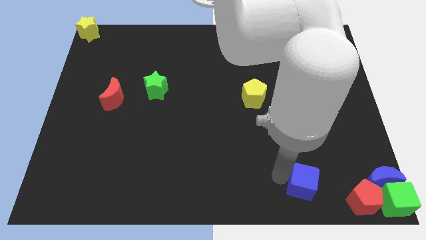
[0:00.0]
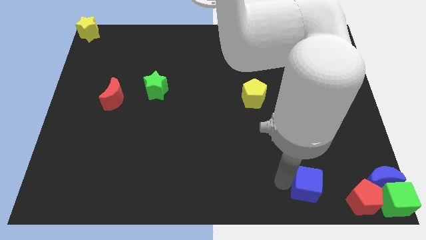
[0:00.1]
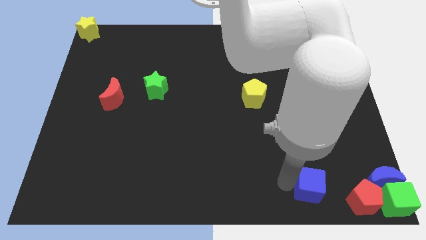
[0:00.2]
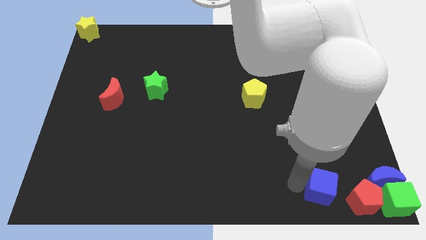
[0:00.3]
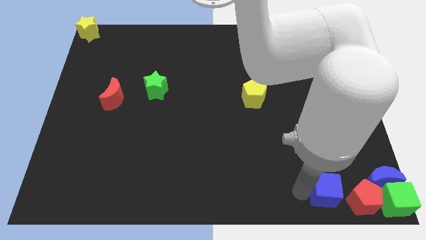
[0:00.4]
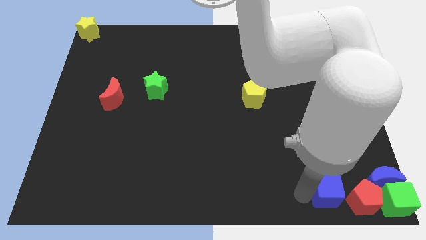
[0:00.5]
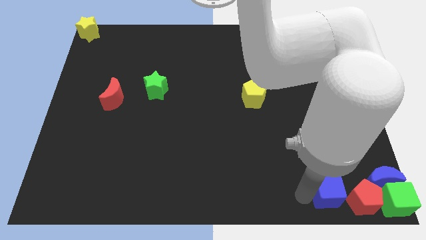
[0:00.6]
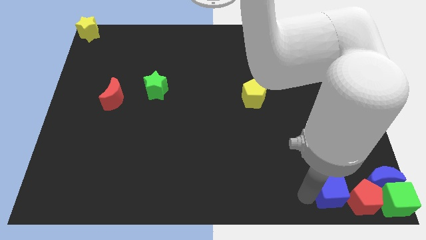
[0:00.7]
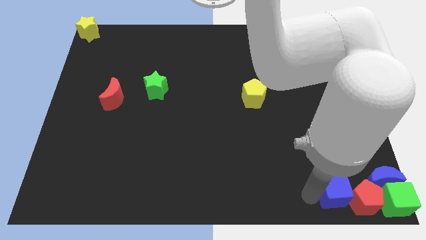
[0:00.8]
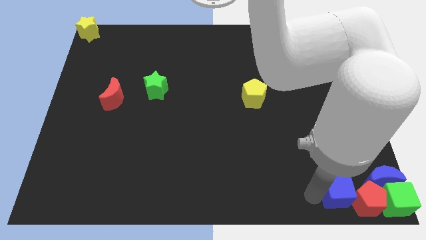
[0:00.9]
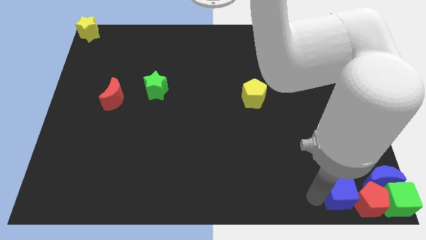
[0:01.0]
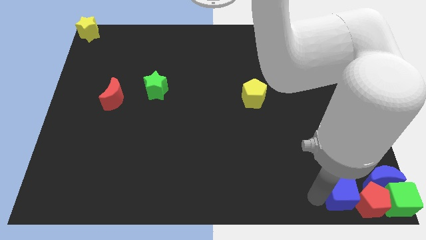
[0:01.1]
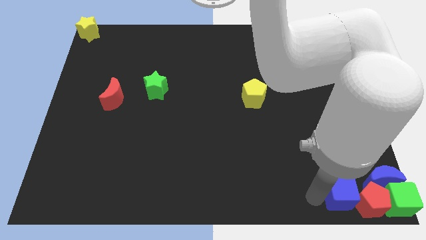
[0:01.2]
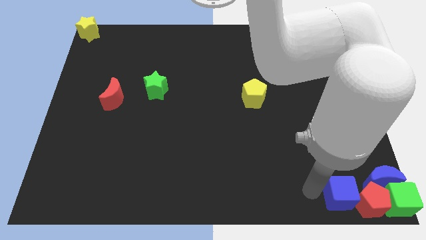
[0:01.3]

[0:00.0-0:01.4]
push the blue cube into the group of blocks

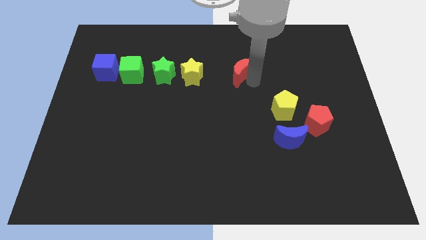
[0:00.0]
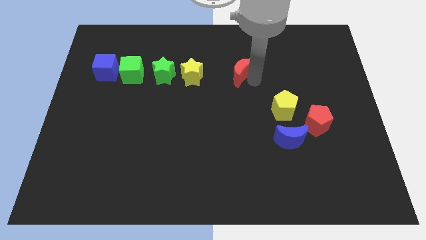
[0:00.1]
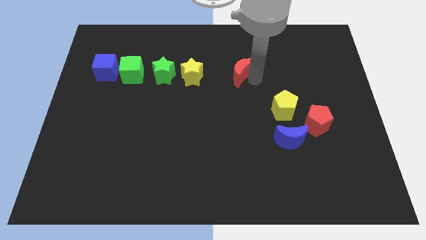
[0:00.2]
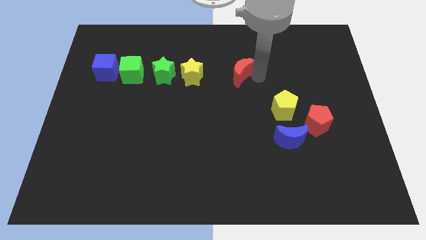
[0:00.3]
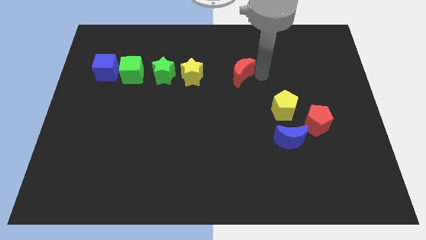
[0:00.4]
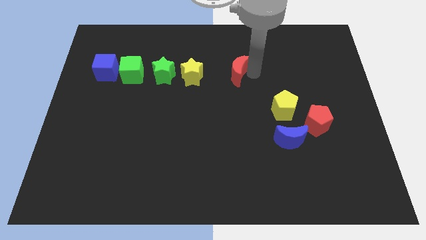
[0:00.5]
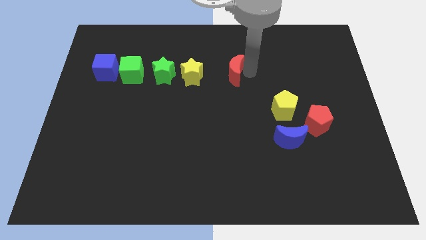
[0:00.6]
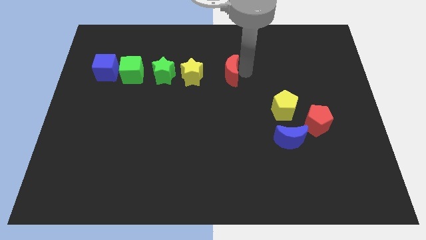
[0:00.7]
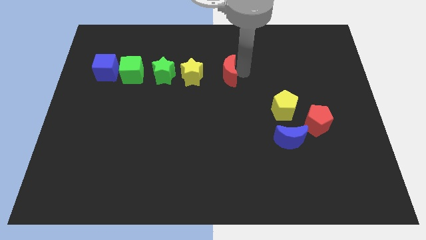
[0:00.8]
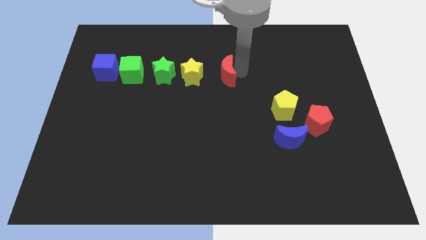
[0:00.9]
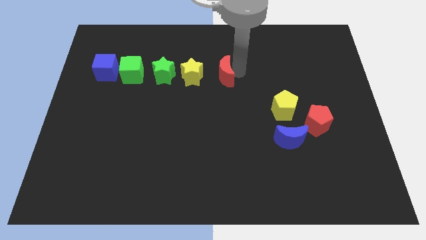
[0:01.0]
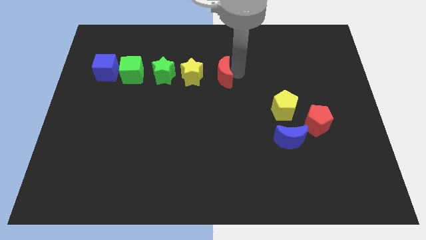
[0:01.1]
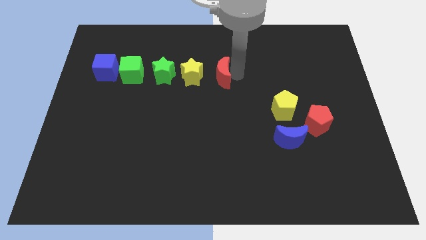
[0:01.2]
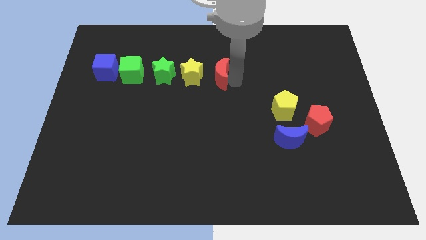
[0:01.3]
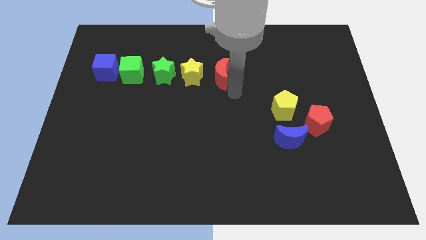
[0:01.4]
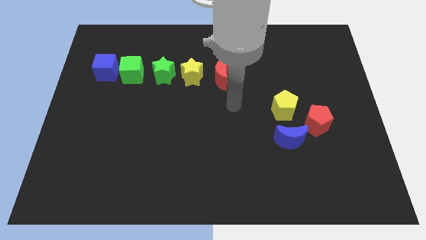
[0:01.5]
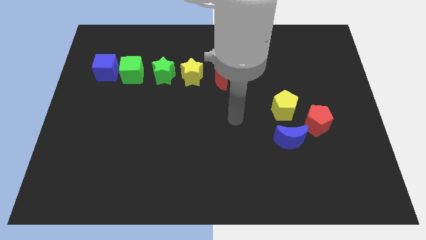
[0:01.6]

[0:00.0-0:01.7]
push the red crescent to the right side of the yellow star

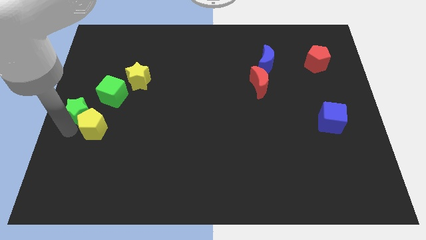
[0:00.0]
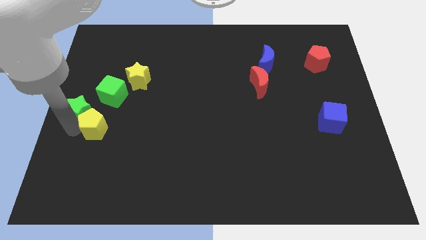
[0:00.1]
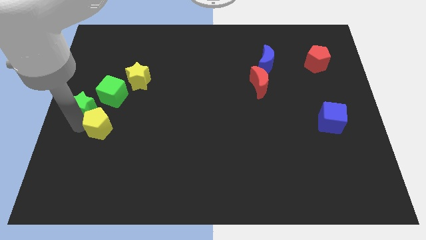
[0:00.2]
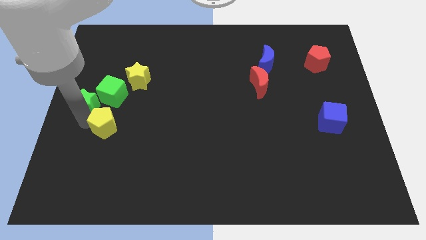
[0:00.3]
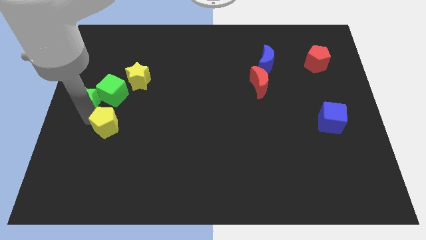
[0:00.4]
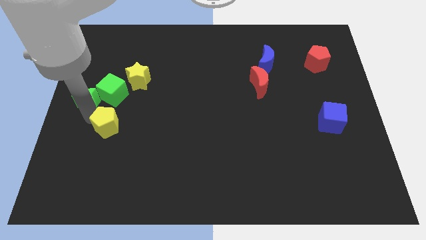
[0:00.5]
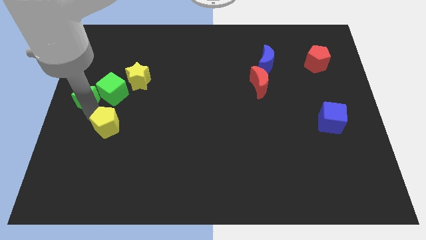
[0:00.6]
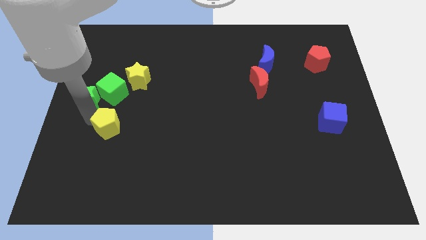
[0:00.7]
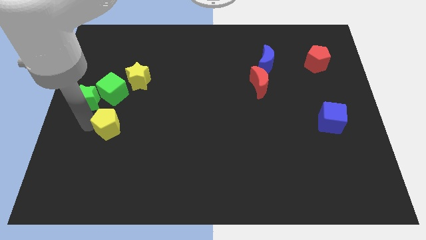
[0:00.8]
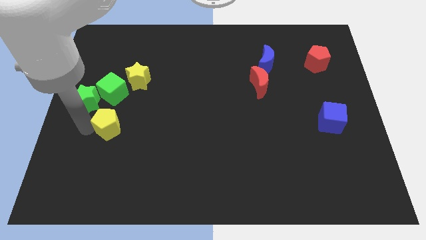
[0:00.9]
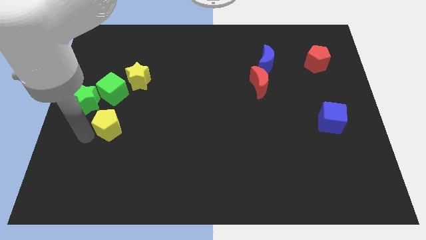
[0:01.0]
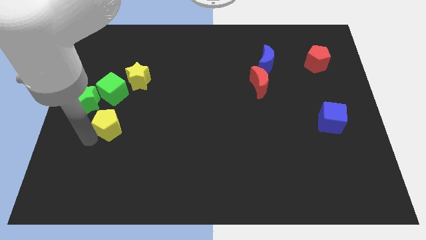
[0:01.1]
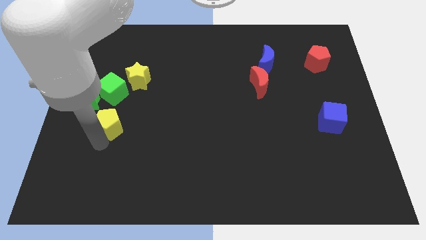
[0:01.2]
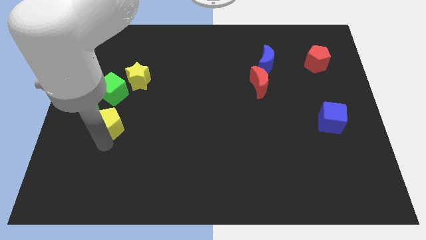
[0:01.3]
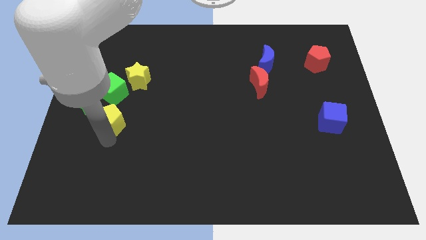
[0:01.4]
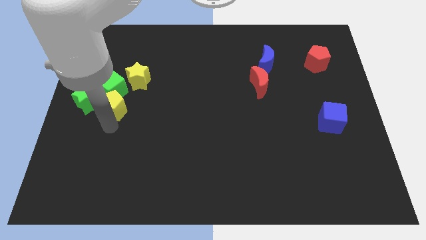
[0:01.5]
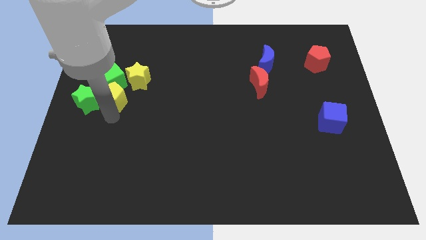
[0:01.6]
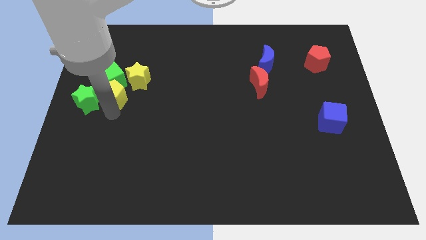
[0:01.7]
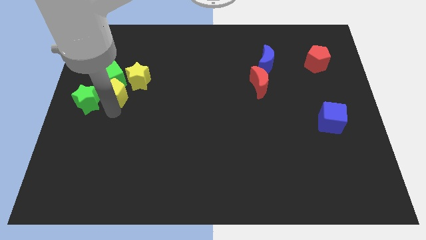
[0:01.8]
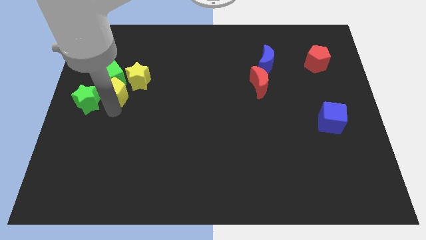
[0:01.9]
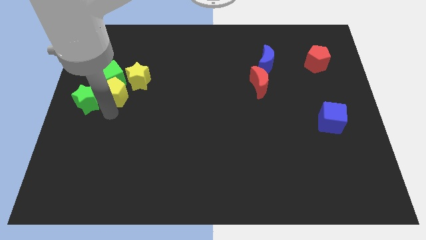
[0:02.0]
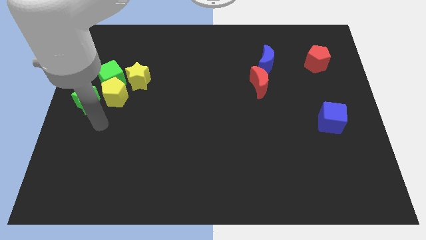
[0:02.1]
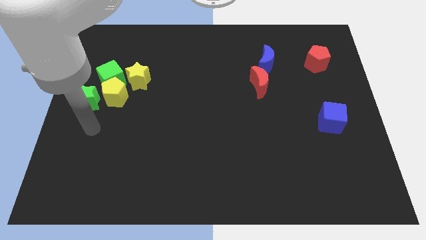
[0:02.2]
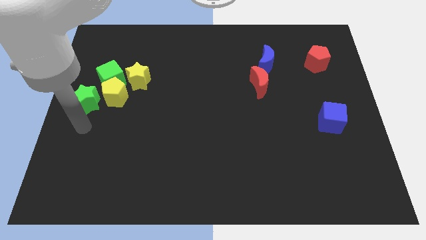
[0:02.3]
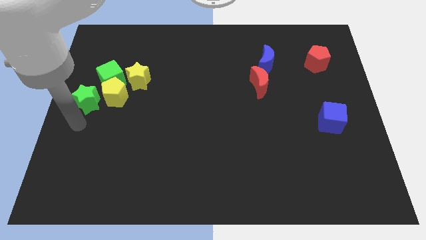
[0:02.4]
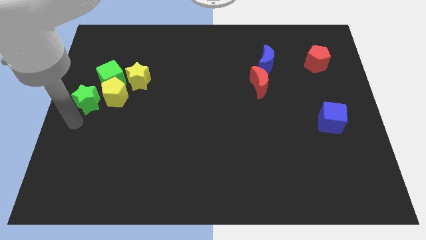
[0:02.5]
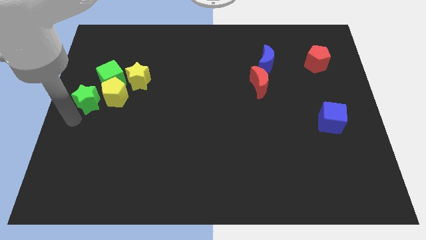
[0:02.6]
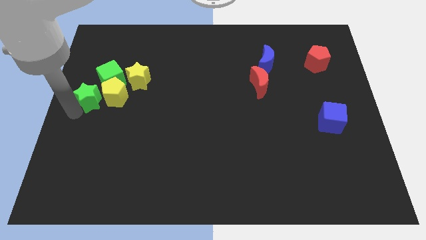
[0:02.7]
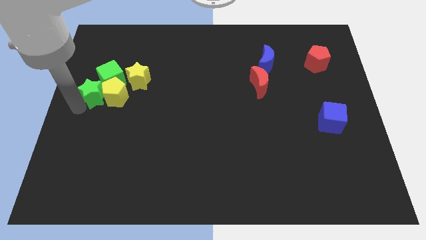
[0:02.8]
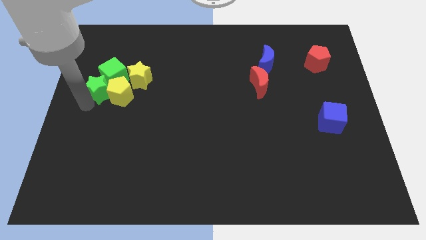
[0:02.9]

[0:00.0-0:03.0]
slide the yellow pentagon and green star into the green cube

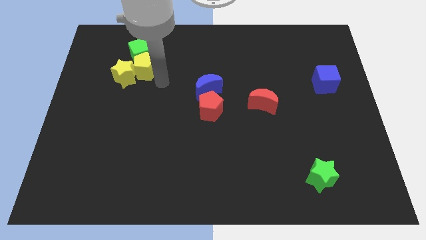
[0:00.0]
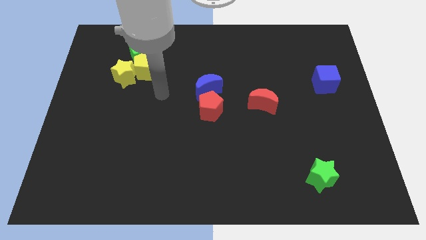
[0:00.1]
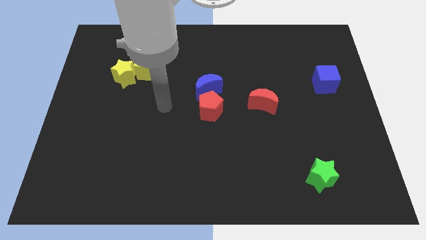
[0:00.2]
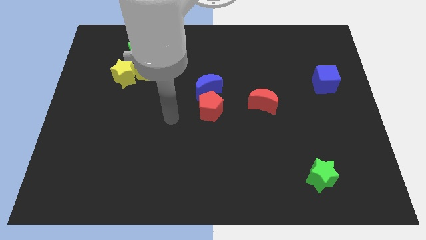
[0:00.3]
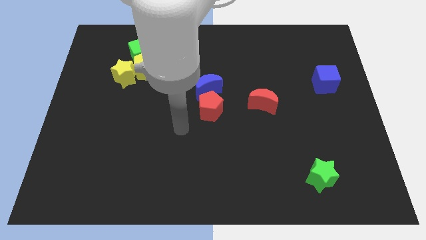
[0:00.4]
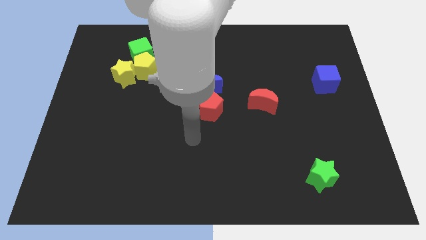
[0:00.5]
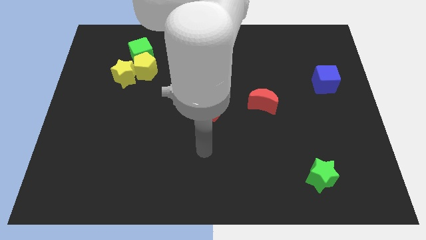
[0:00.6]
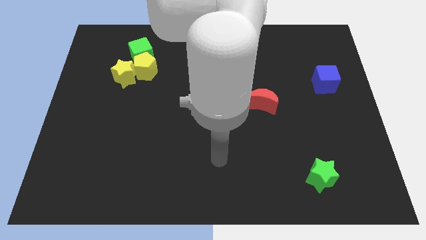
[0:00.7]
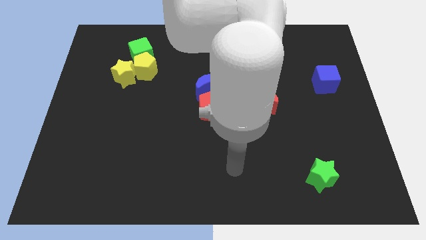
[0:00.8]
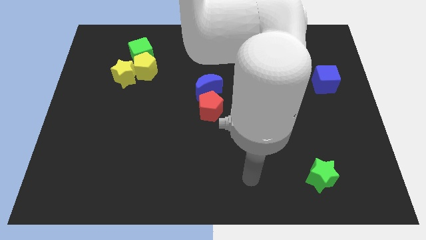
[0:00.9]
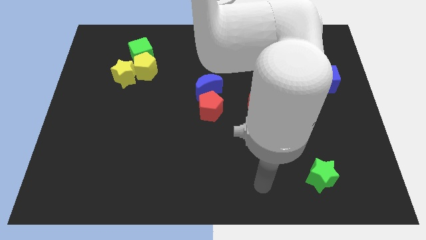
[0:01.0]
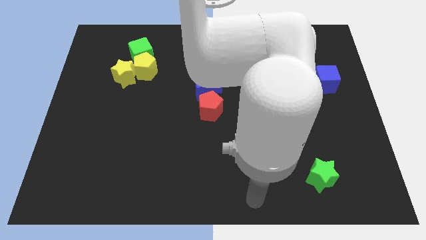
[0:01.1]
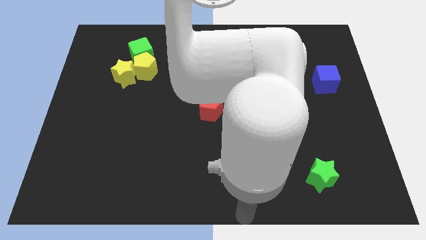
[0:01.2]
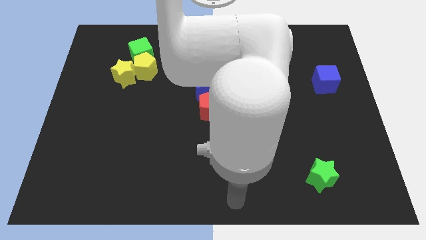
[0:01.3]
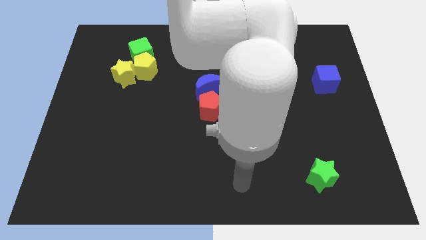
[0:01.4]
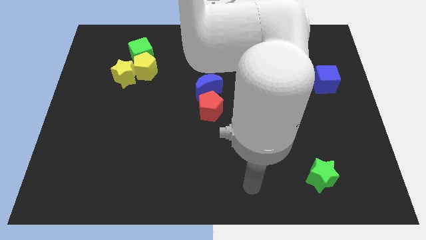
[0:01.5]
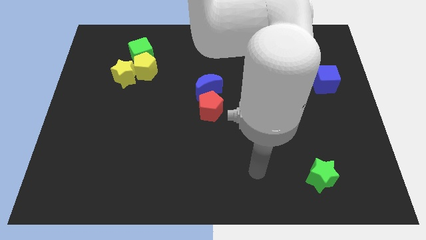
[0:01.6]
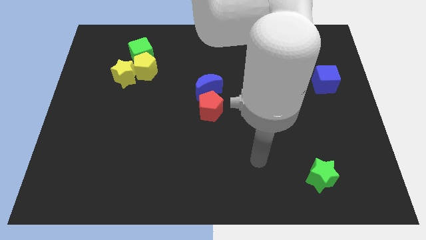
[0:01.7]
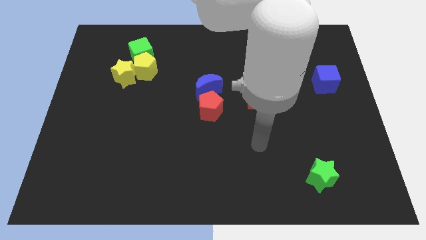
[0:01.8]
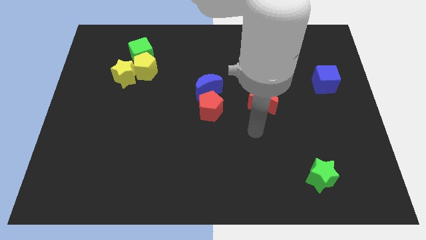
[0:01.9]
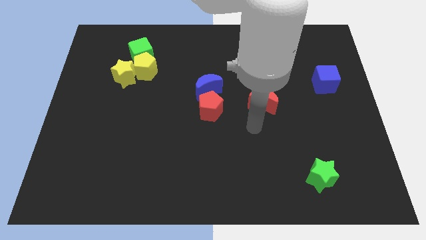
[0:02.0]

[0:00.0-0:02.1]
move the arm to the bottom of the red crescent

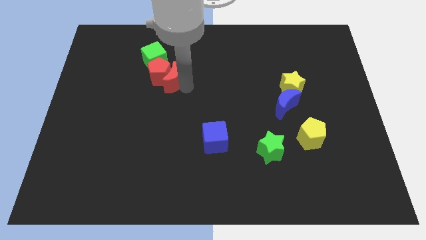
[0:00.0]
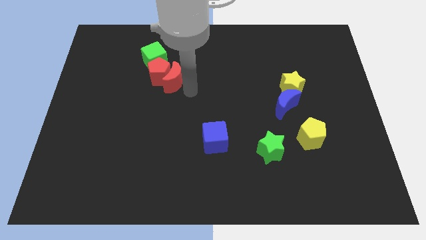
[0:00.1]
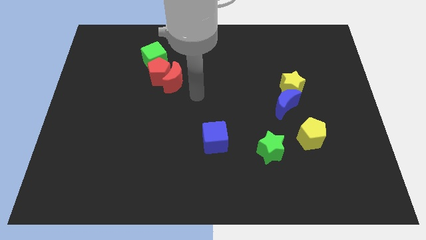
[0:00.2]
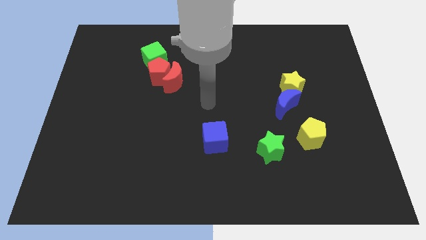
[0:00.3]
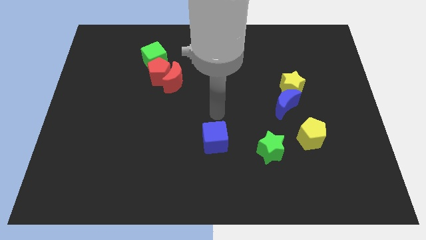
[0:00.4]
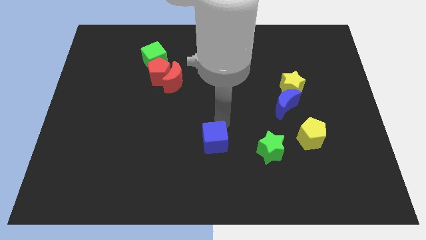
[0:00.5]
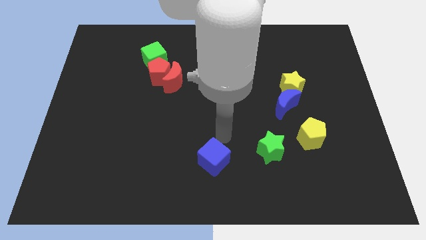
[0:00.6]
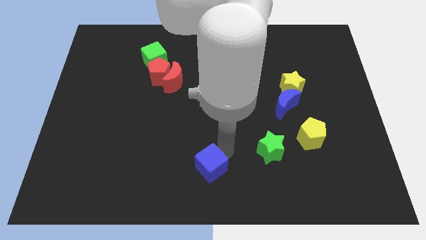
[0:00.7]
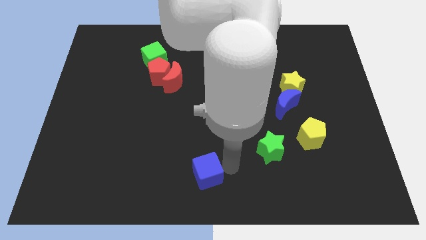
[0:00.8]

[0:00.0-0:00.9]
move the arm away from the red moon
